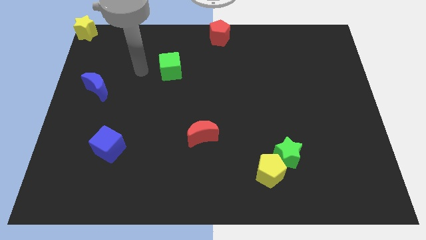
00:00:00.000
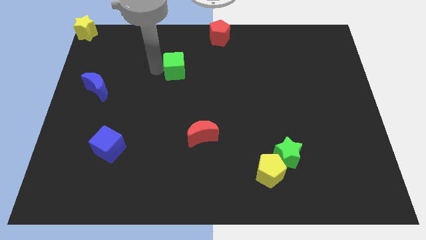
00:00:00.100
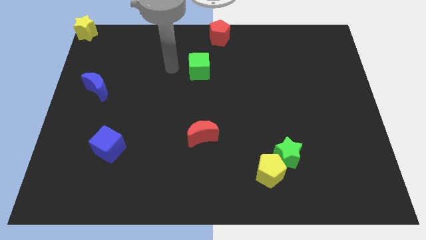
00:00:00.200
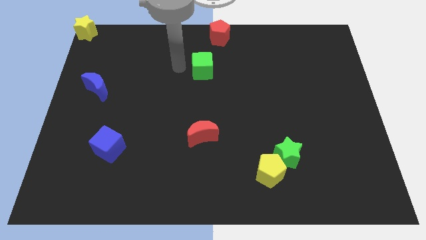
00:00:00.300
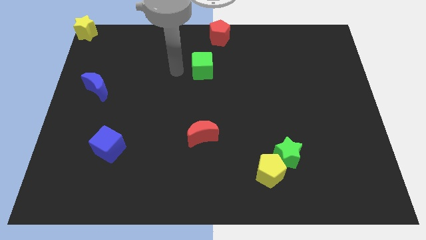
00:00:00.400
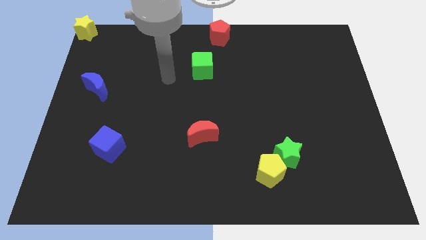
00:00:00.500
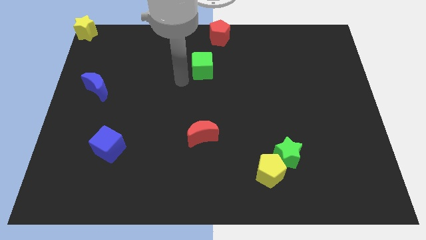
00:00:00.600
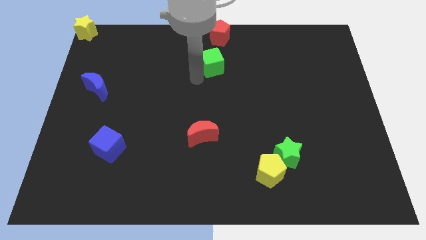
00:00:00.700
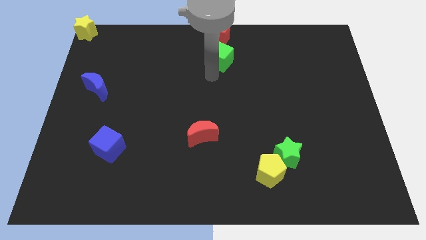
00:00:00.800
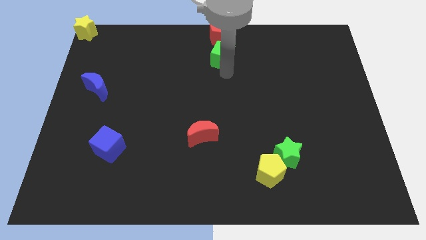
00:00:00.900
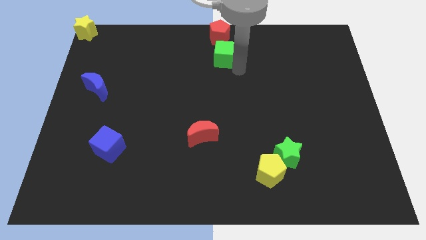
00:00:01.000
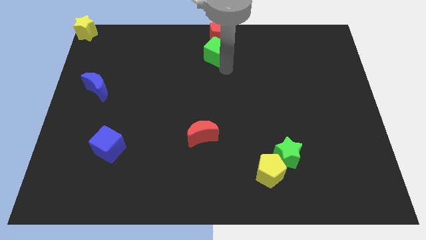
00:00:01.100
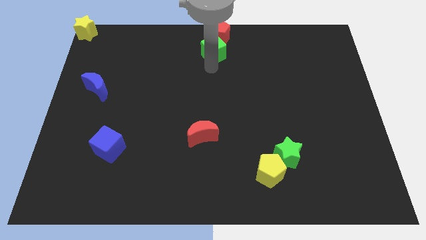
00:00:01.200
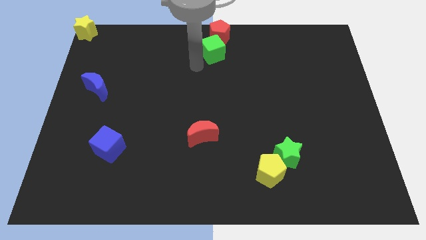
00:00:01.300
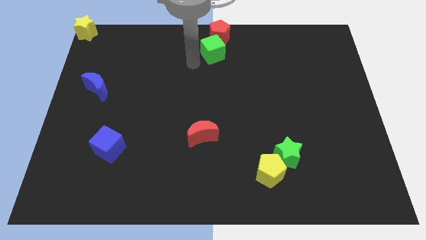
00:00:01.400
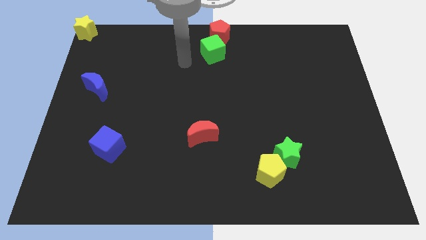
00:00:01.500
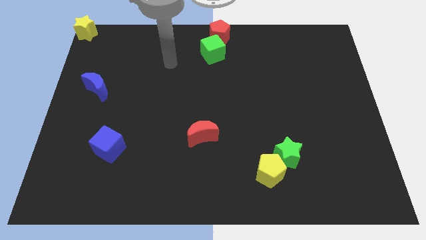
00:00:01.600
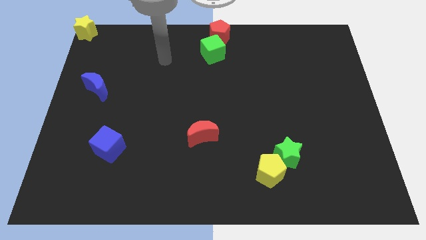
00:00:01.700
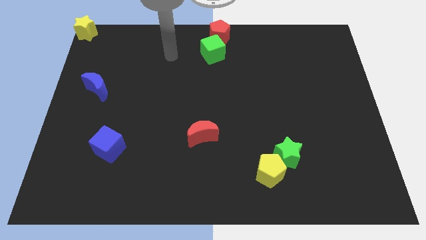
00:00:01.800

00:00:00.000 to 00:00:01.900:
move the green cube to the bottom right of the red pentagon

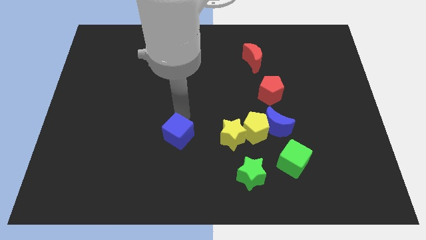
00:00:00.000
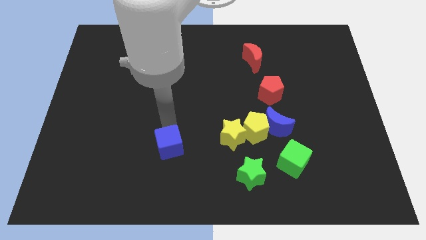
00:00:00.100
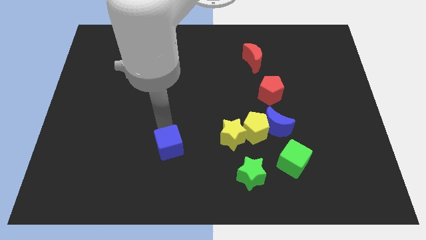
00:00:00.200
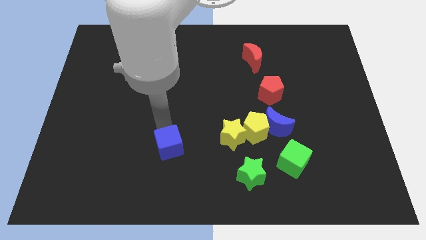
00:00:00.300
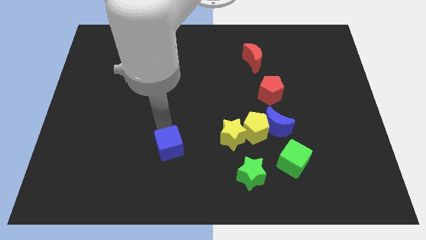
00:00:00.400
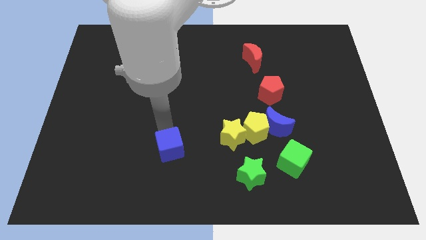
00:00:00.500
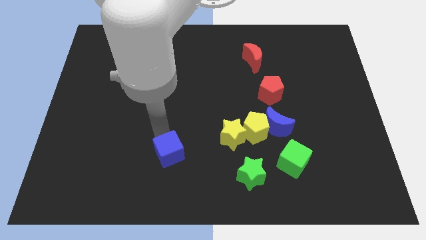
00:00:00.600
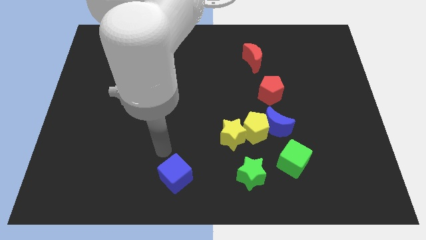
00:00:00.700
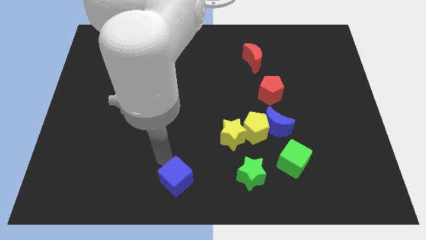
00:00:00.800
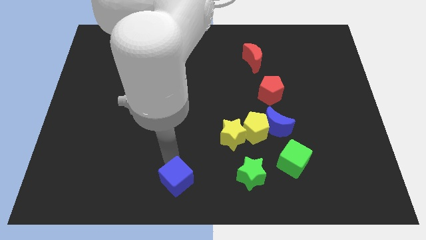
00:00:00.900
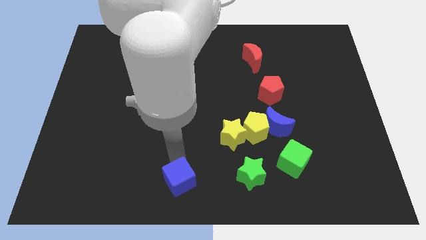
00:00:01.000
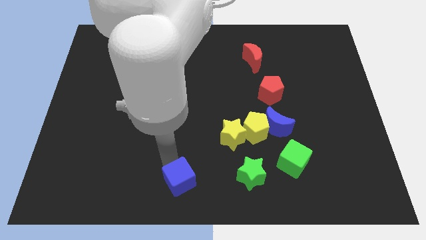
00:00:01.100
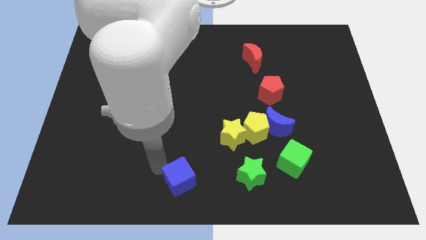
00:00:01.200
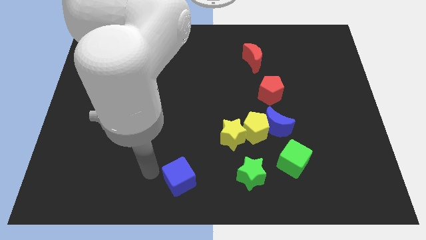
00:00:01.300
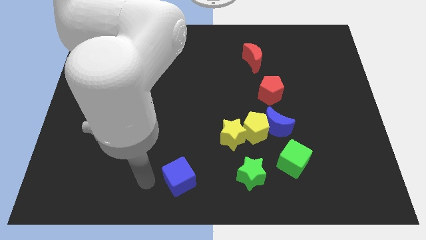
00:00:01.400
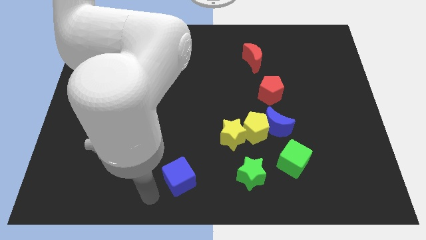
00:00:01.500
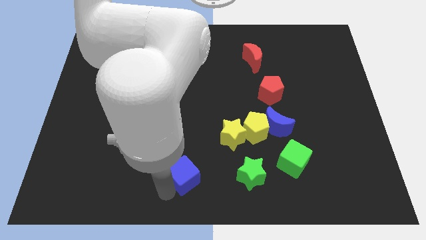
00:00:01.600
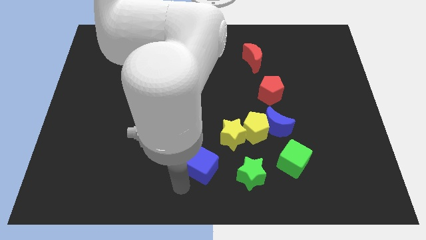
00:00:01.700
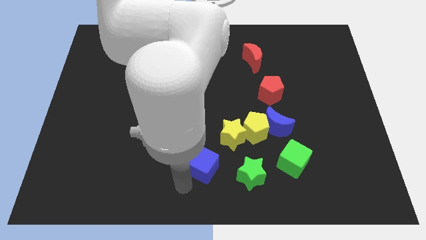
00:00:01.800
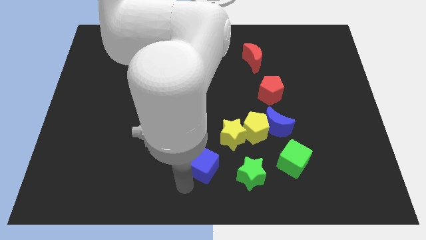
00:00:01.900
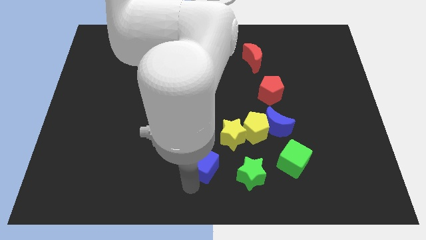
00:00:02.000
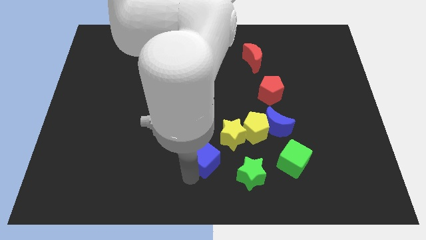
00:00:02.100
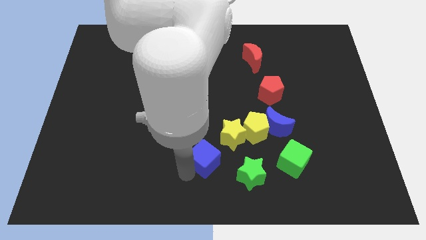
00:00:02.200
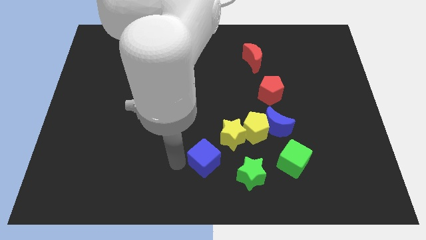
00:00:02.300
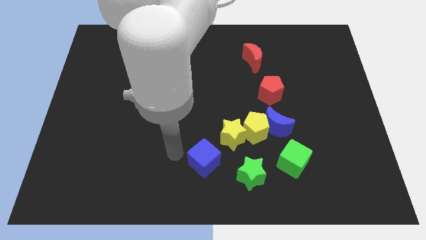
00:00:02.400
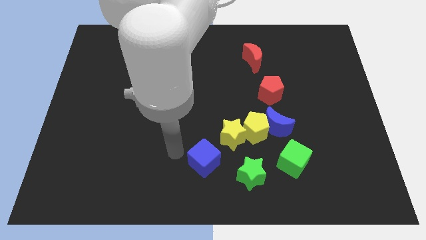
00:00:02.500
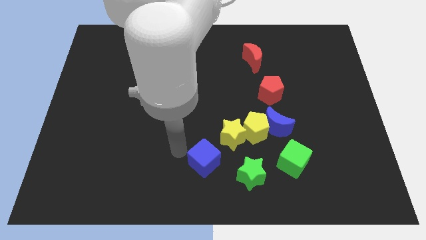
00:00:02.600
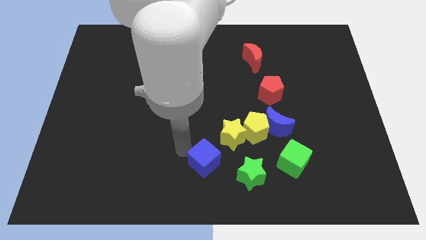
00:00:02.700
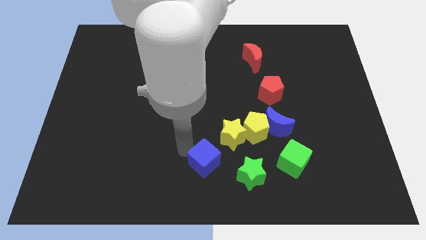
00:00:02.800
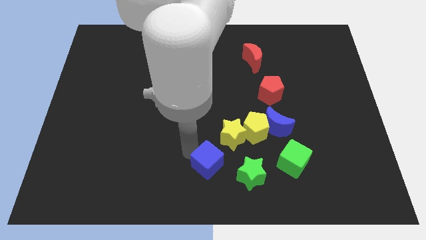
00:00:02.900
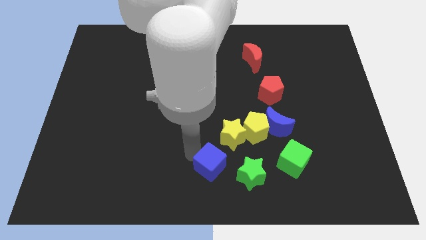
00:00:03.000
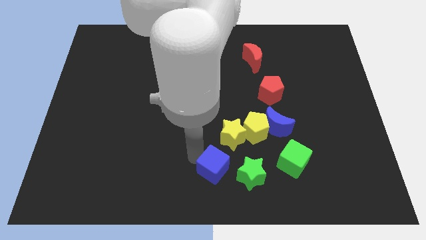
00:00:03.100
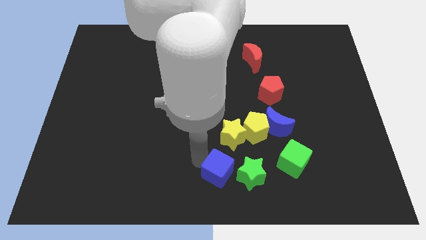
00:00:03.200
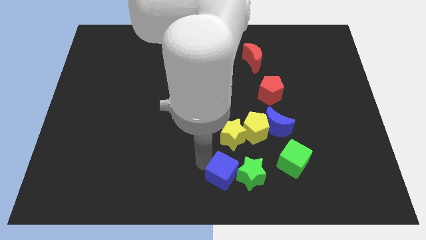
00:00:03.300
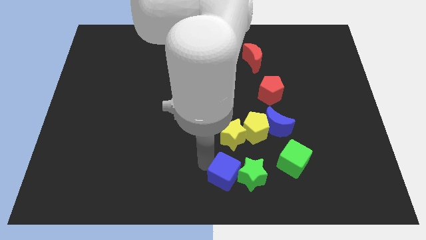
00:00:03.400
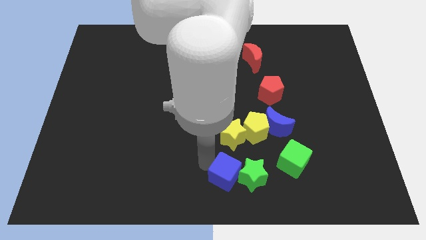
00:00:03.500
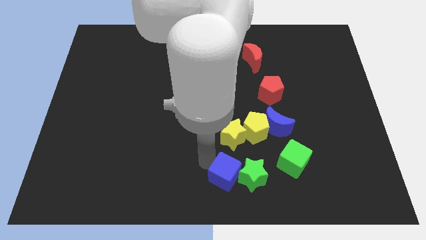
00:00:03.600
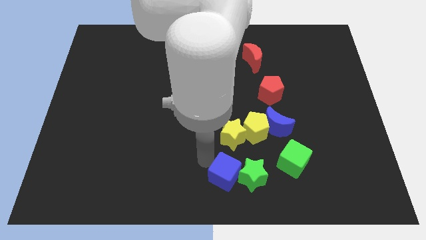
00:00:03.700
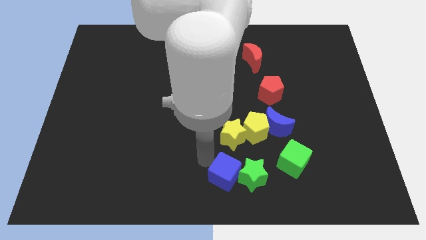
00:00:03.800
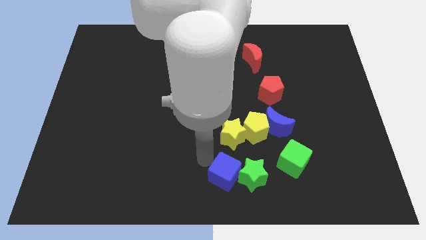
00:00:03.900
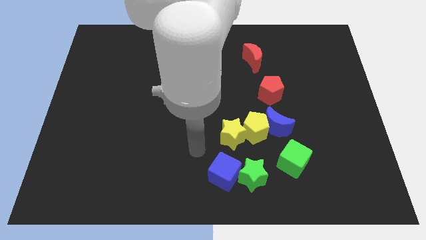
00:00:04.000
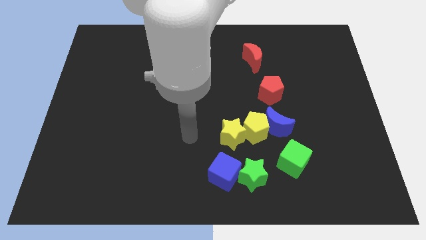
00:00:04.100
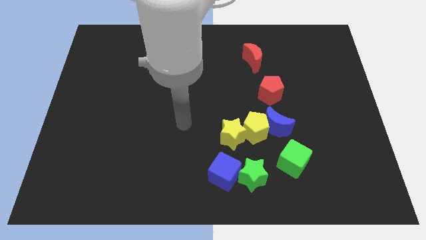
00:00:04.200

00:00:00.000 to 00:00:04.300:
move blue cube into green star

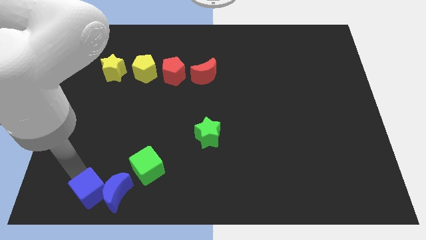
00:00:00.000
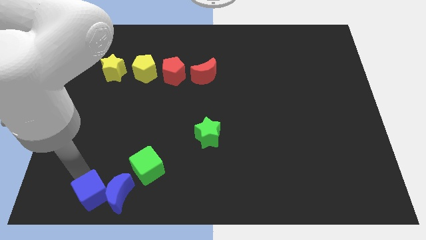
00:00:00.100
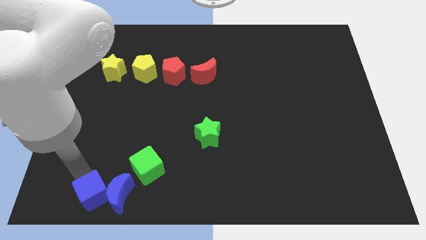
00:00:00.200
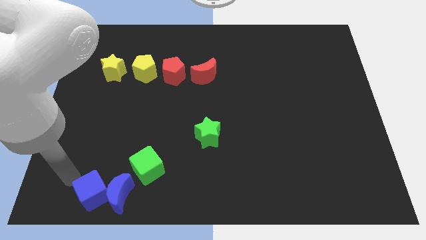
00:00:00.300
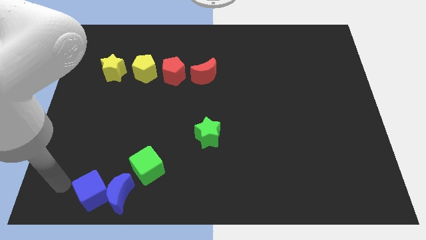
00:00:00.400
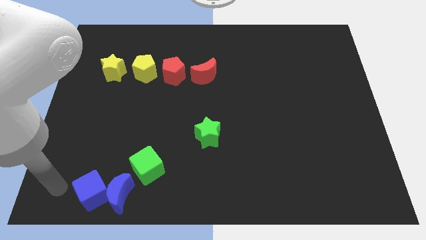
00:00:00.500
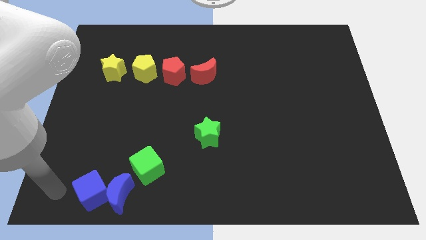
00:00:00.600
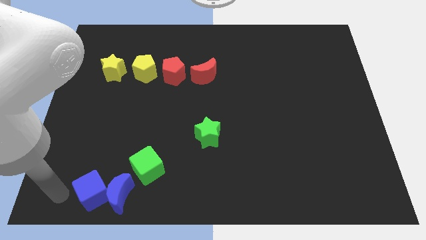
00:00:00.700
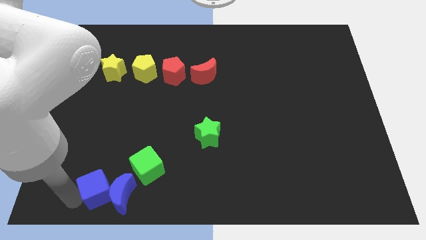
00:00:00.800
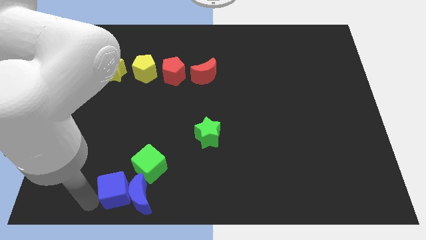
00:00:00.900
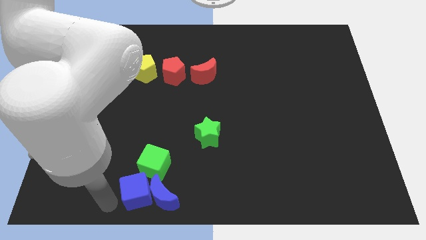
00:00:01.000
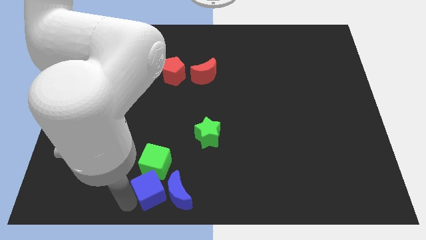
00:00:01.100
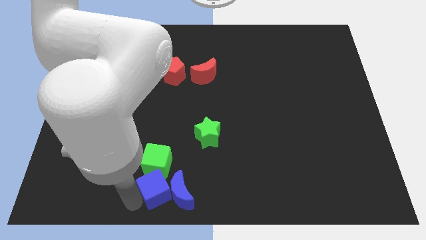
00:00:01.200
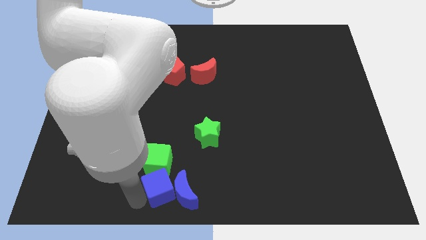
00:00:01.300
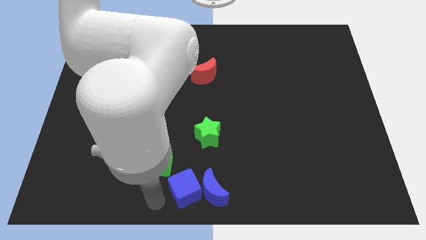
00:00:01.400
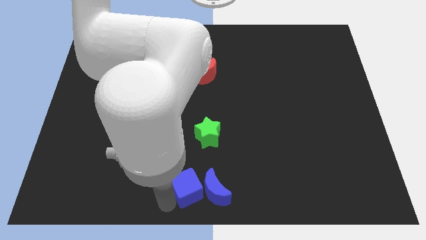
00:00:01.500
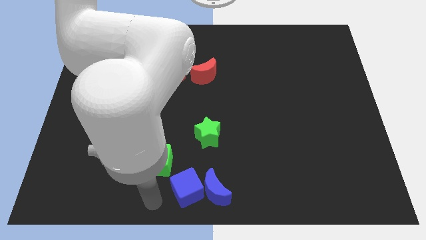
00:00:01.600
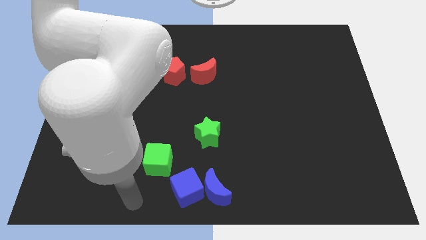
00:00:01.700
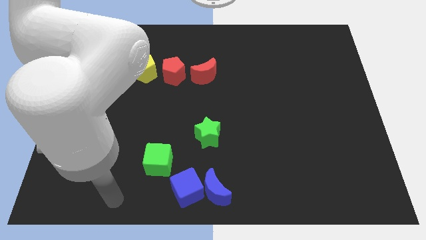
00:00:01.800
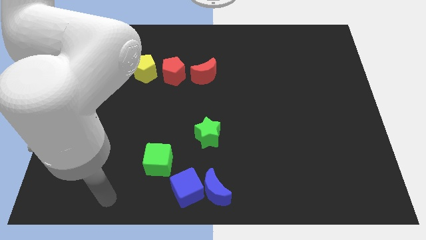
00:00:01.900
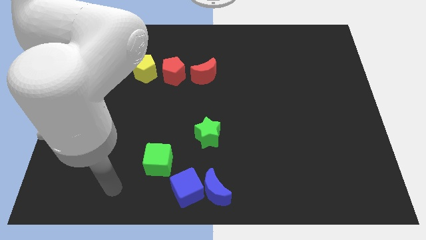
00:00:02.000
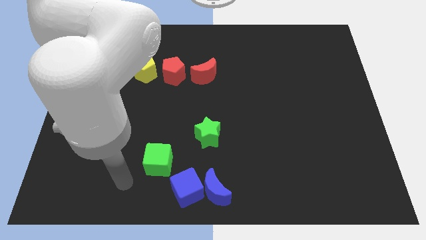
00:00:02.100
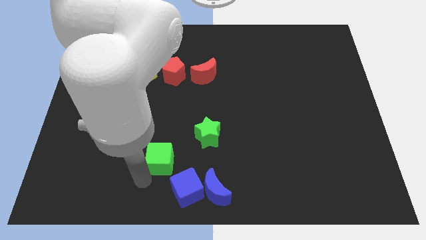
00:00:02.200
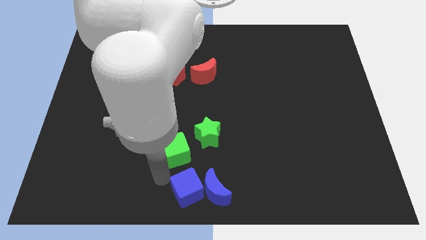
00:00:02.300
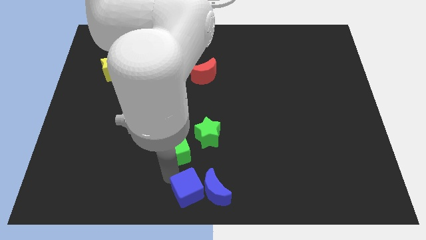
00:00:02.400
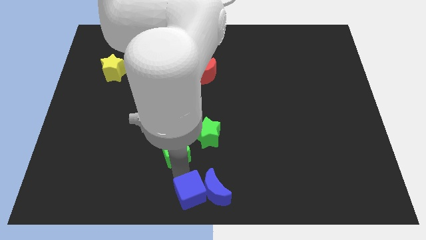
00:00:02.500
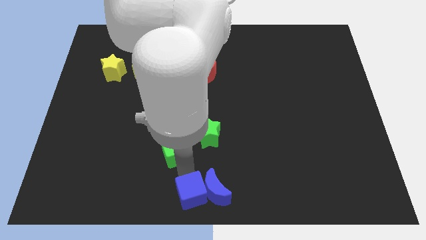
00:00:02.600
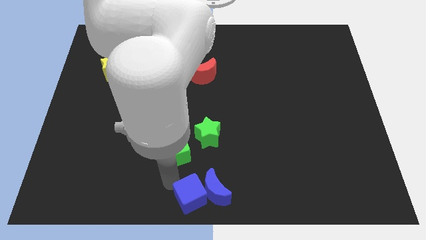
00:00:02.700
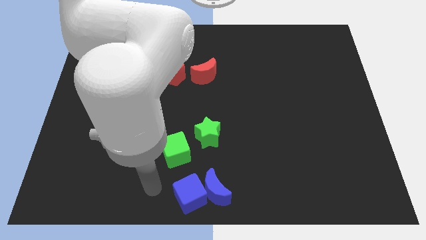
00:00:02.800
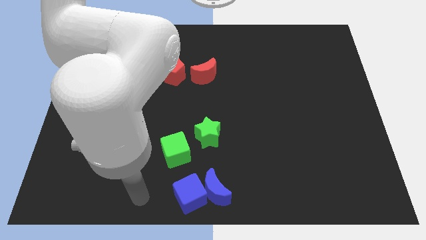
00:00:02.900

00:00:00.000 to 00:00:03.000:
push blue square and green square towards center of the board
